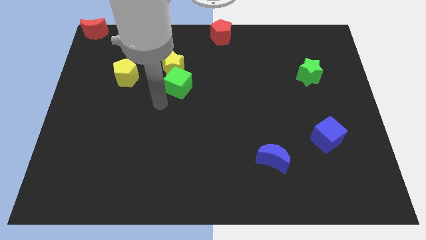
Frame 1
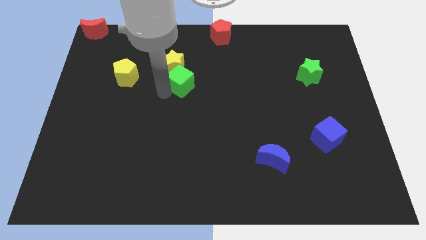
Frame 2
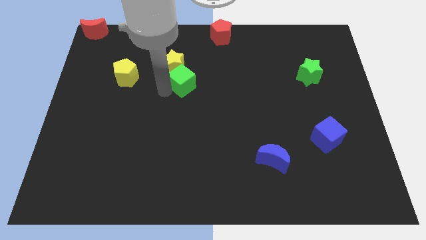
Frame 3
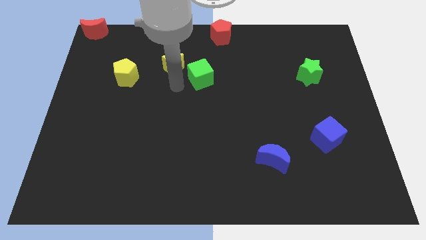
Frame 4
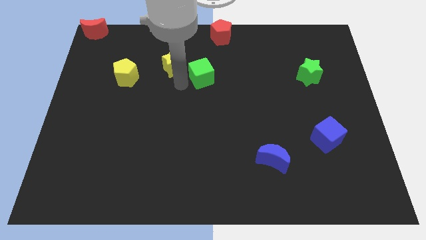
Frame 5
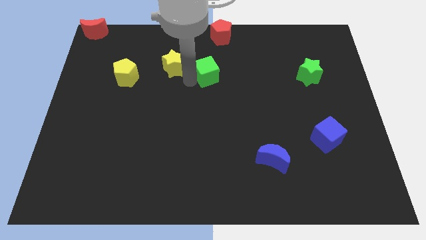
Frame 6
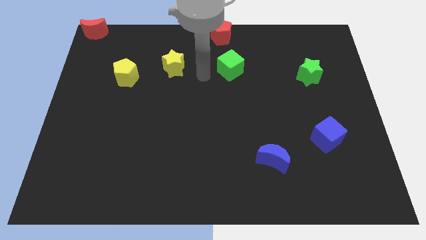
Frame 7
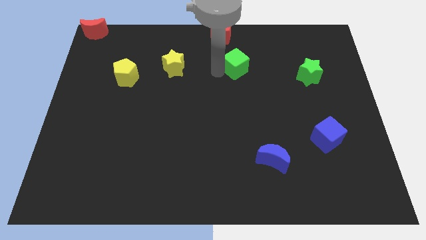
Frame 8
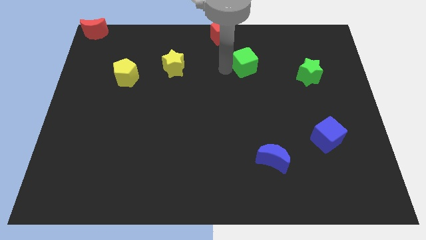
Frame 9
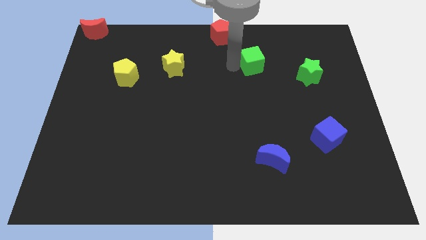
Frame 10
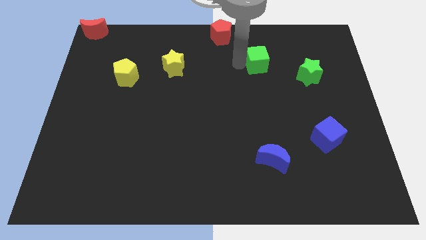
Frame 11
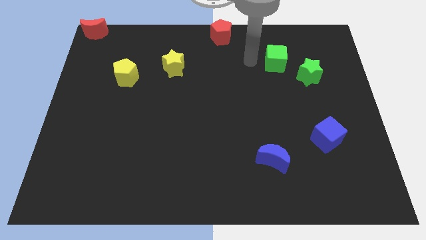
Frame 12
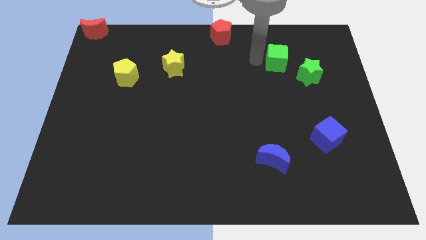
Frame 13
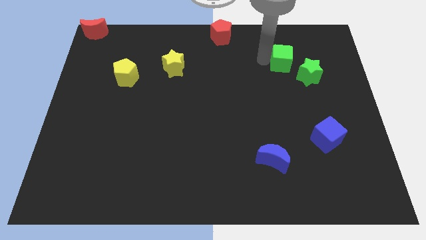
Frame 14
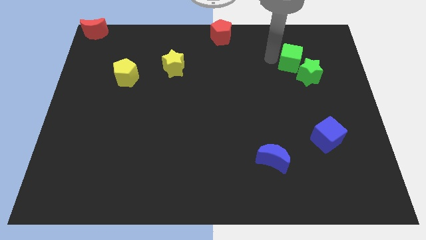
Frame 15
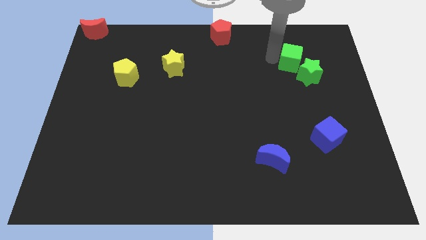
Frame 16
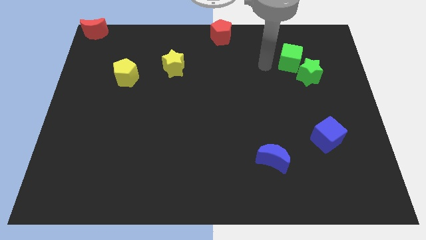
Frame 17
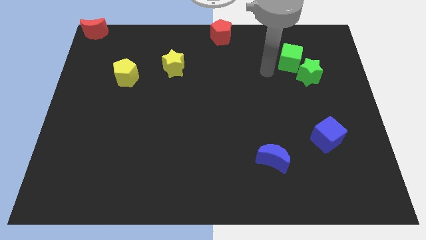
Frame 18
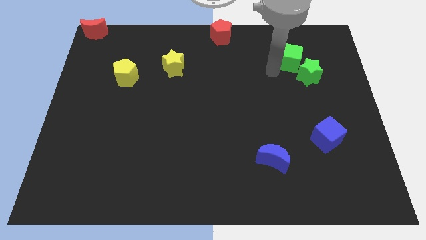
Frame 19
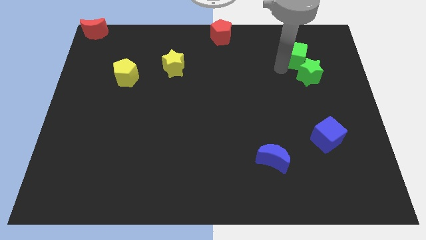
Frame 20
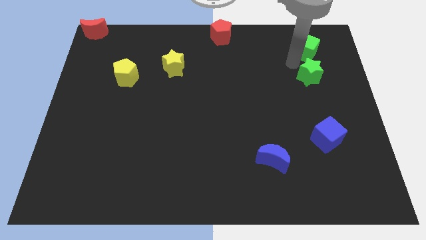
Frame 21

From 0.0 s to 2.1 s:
move the green cube above the green star

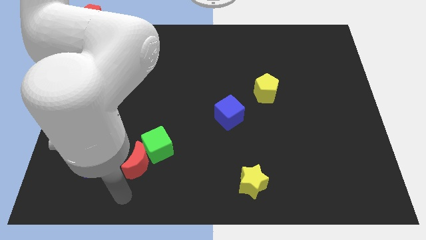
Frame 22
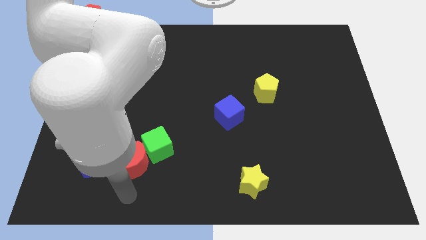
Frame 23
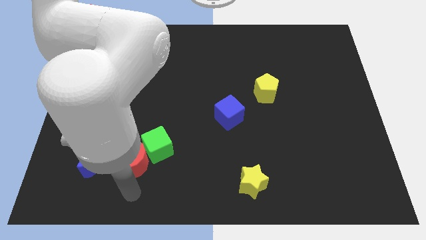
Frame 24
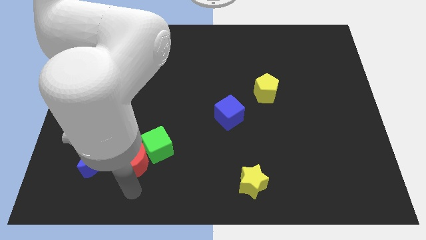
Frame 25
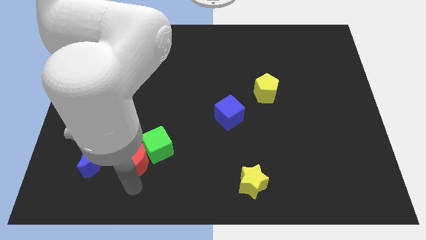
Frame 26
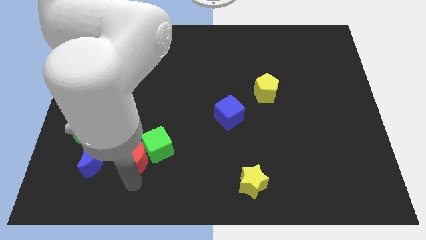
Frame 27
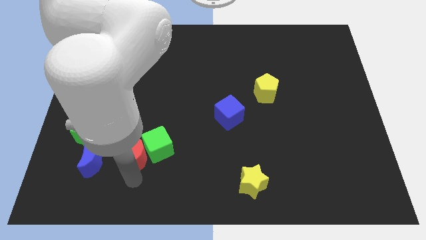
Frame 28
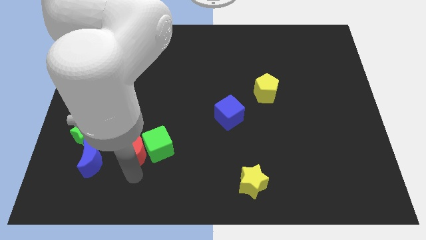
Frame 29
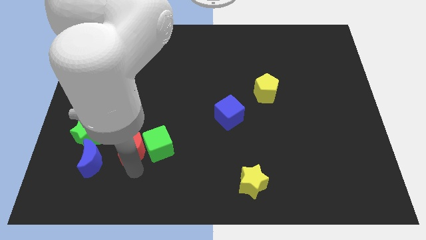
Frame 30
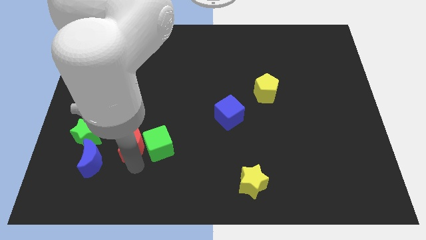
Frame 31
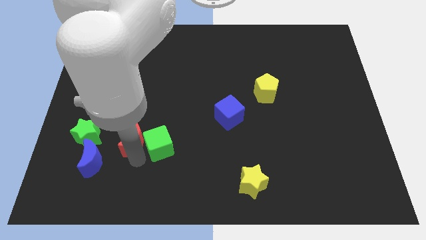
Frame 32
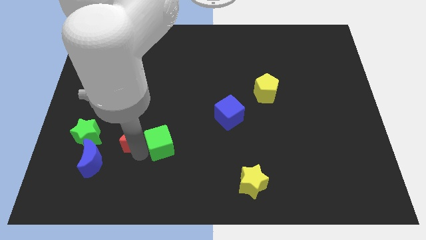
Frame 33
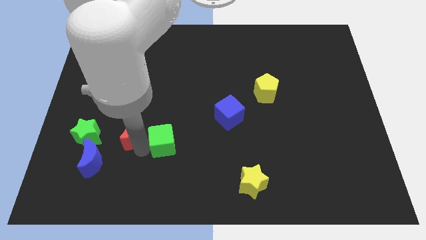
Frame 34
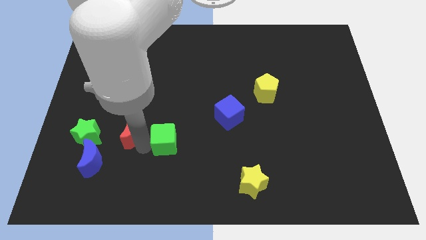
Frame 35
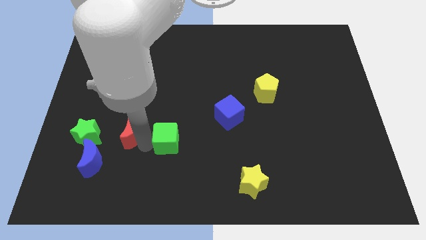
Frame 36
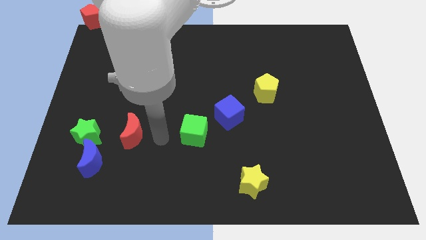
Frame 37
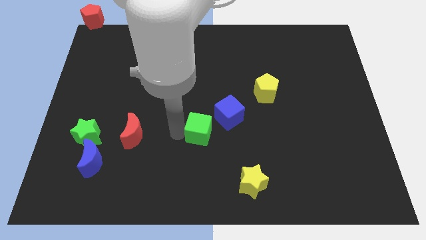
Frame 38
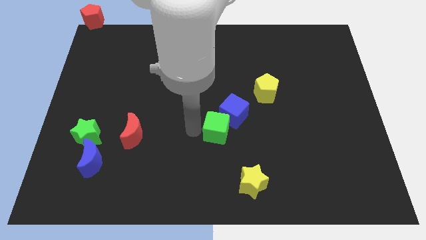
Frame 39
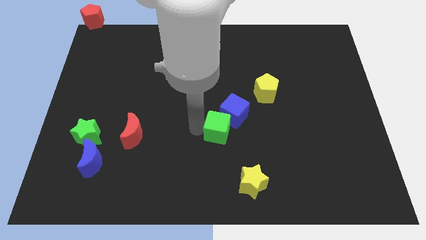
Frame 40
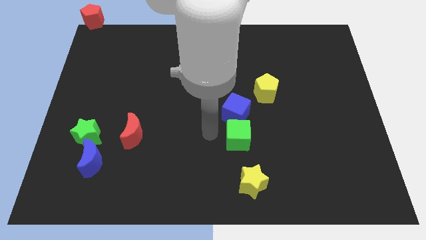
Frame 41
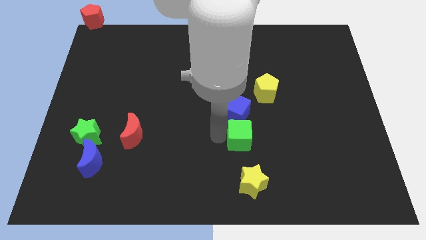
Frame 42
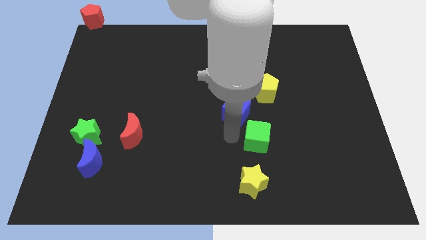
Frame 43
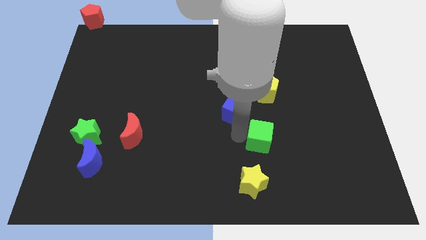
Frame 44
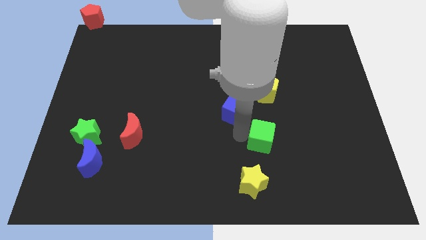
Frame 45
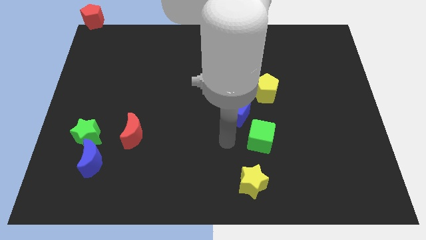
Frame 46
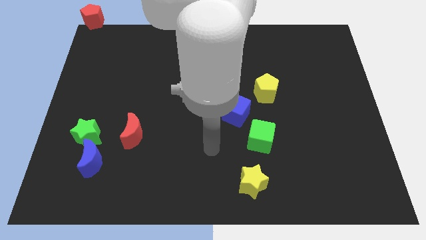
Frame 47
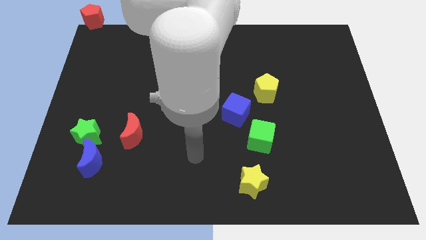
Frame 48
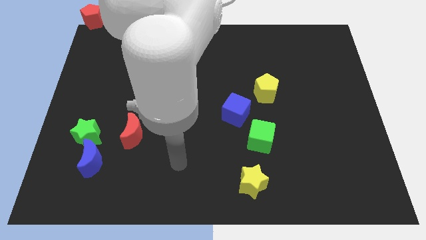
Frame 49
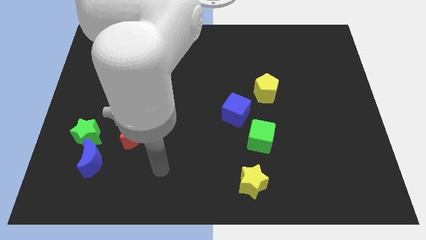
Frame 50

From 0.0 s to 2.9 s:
place green cube above yellow star

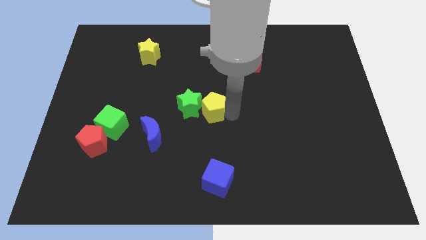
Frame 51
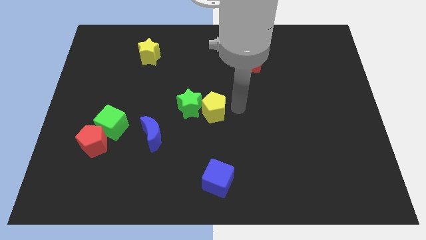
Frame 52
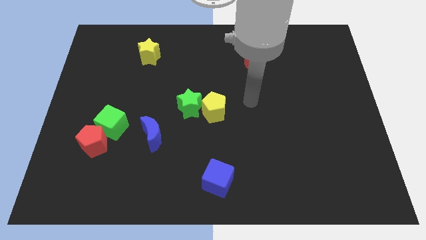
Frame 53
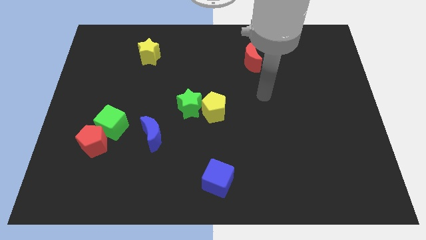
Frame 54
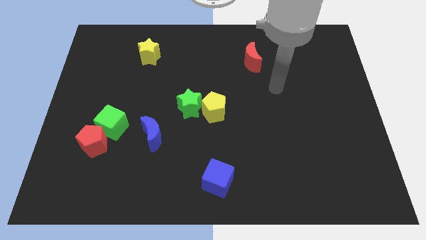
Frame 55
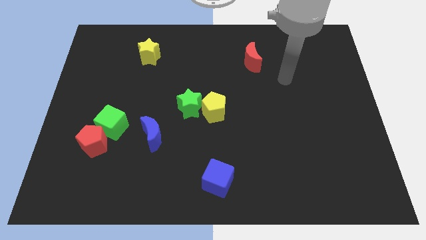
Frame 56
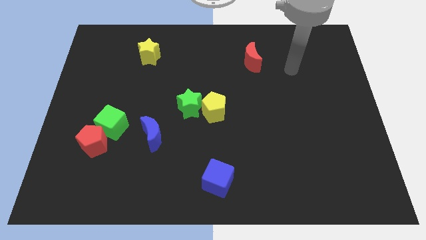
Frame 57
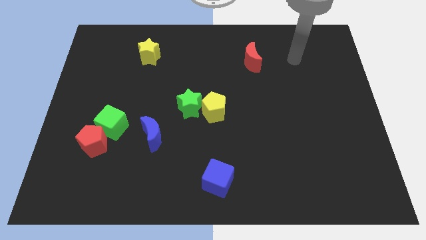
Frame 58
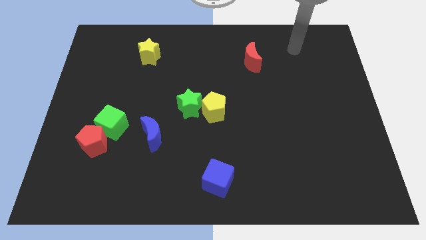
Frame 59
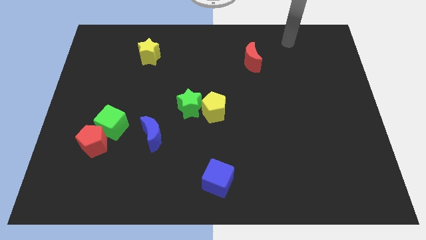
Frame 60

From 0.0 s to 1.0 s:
move your arm away from yellow pentagon

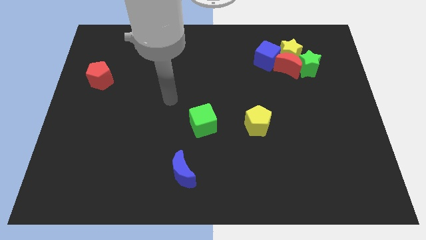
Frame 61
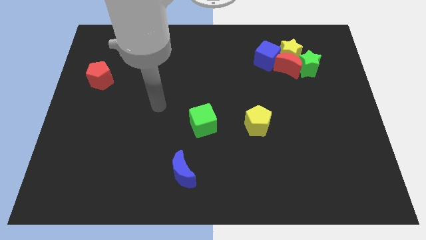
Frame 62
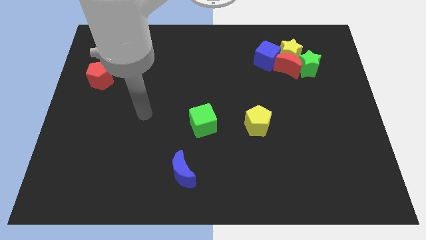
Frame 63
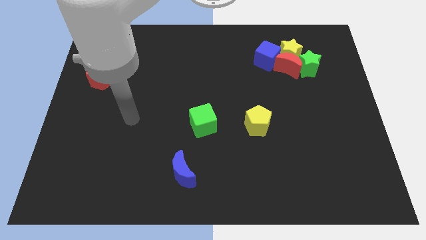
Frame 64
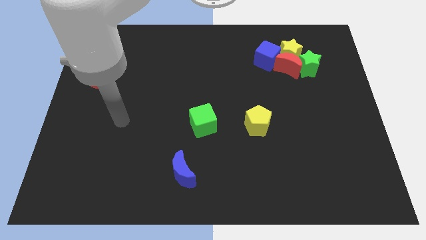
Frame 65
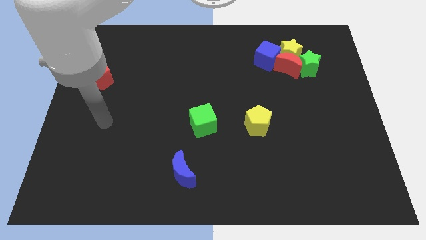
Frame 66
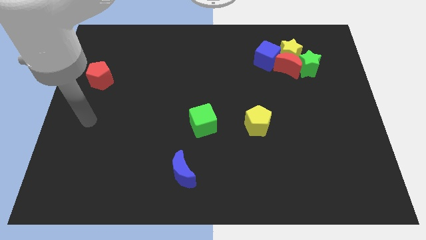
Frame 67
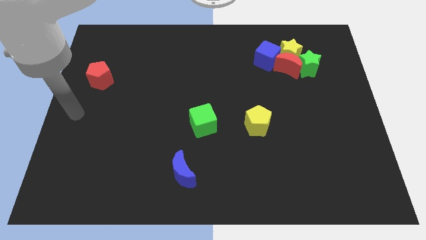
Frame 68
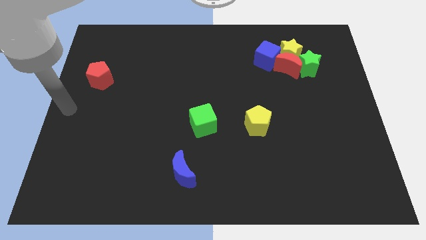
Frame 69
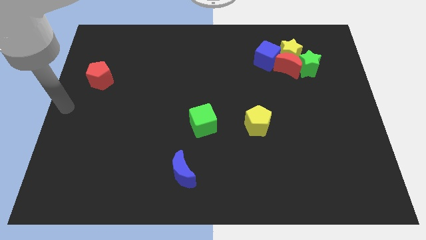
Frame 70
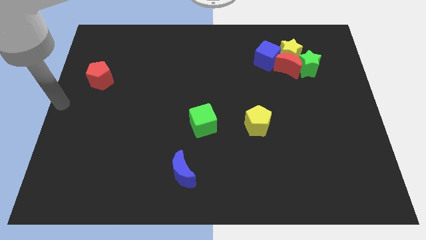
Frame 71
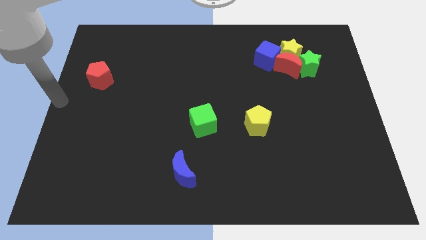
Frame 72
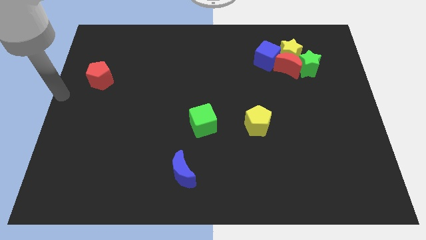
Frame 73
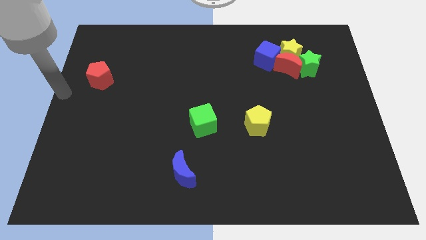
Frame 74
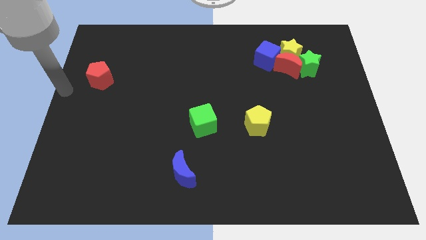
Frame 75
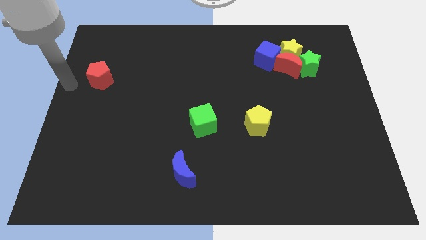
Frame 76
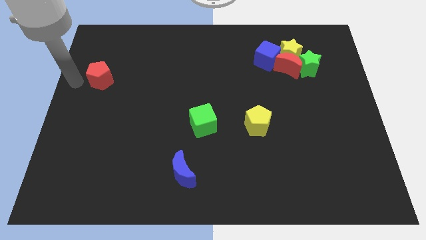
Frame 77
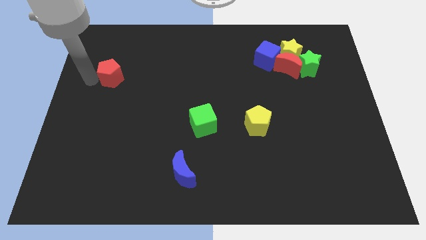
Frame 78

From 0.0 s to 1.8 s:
move your arm near to the red pentagon

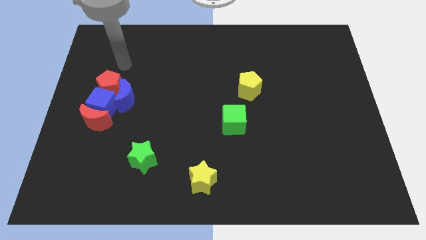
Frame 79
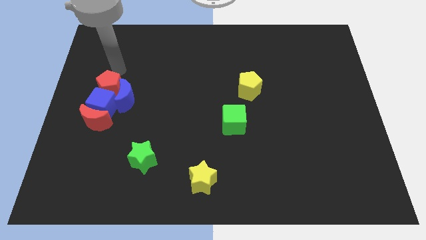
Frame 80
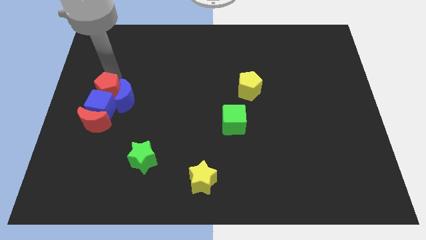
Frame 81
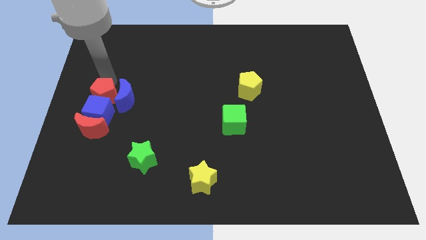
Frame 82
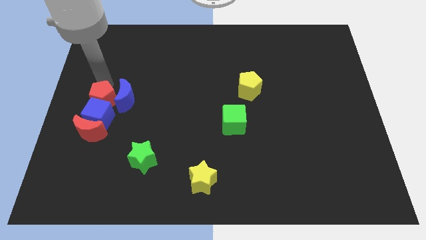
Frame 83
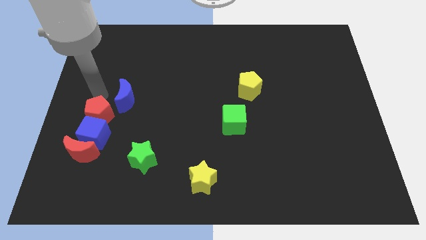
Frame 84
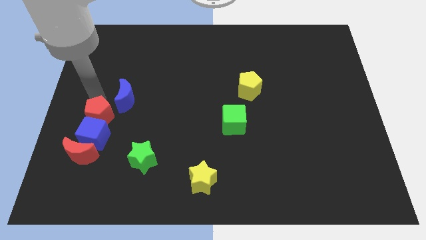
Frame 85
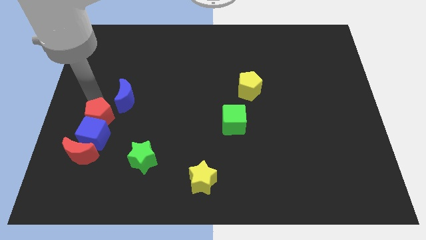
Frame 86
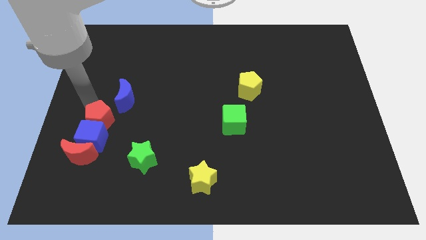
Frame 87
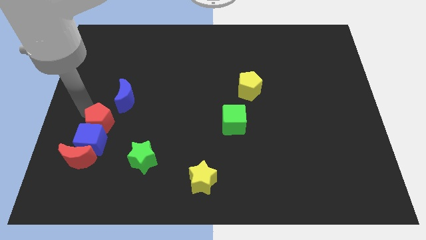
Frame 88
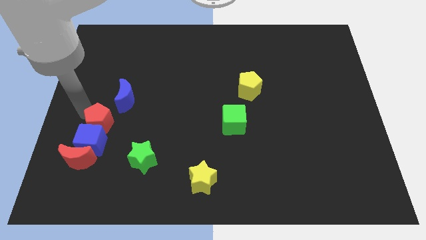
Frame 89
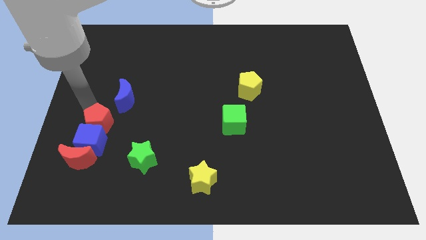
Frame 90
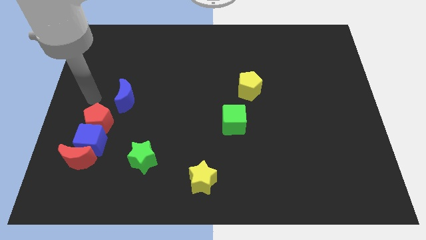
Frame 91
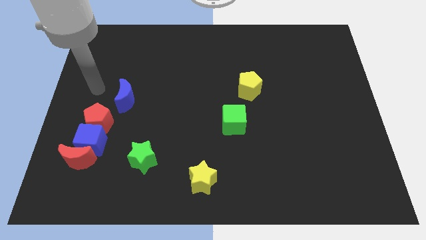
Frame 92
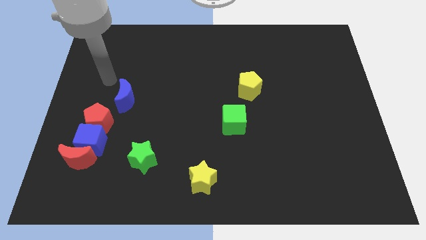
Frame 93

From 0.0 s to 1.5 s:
push red pentagon slightly towards down
